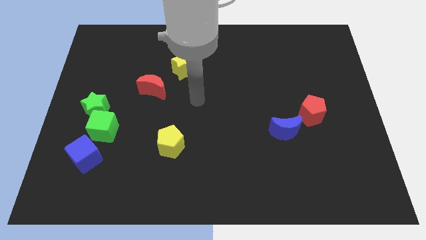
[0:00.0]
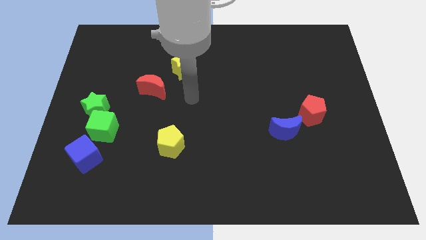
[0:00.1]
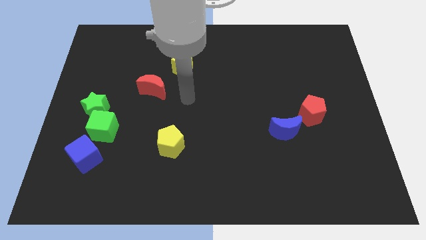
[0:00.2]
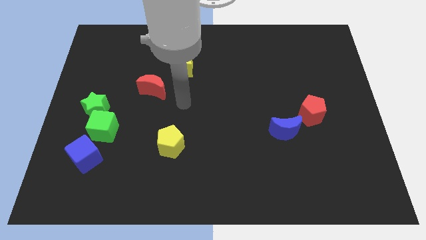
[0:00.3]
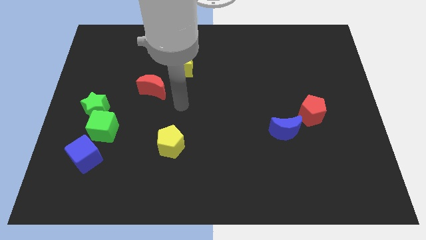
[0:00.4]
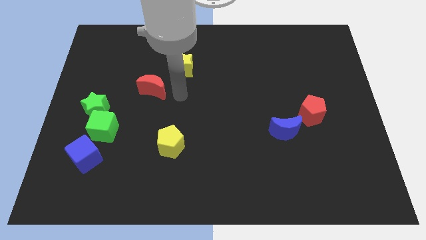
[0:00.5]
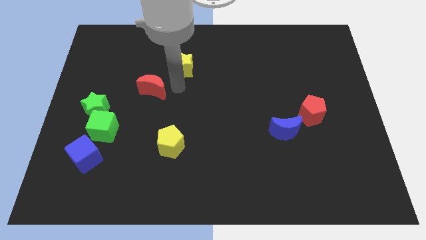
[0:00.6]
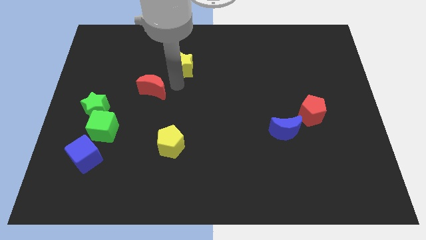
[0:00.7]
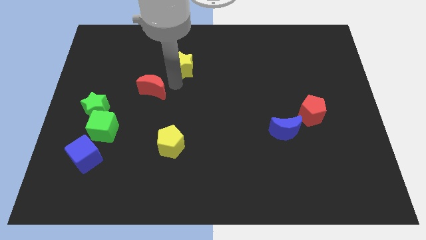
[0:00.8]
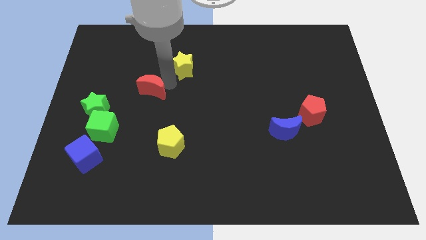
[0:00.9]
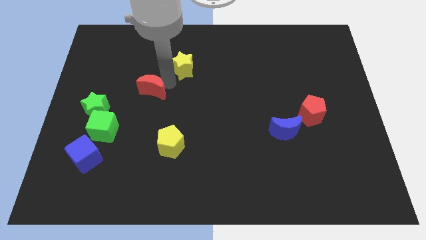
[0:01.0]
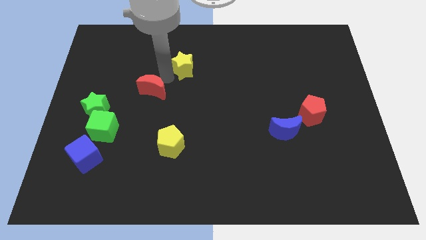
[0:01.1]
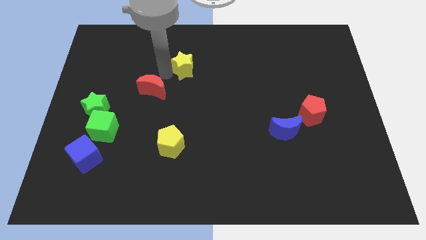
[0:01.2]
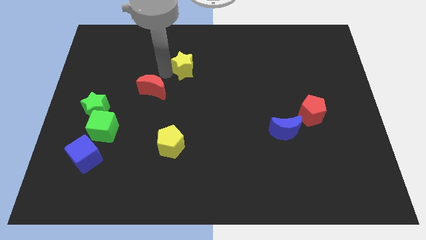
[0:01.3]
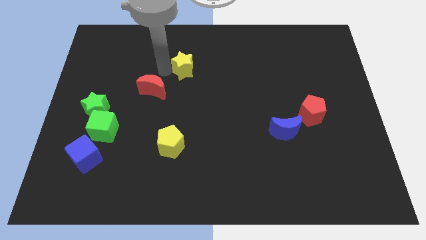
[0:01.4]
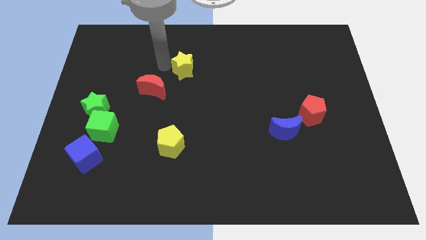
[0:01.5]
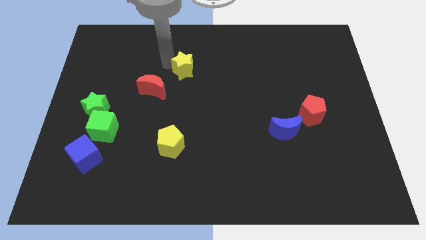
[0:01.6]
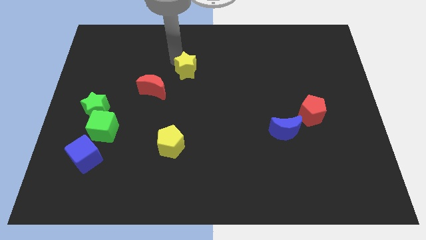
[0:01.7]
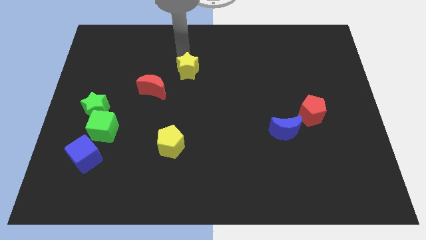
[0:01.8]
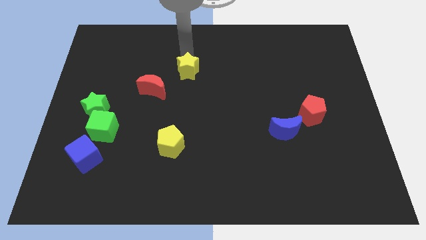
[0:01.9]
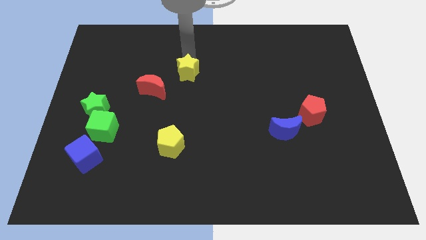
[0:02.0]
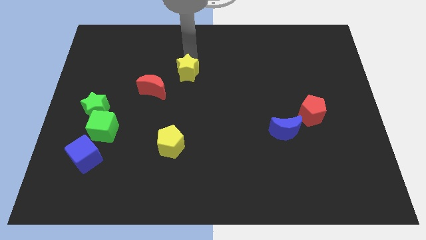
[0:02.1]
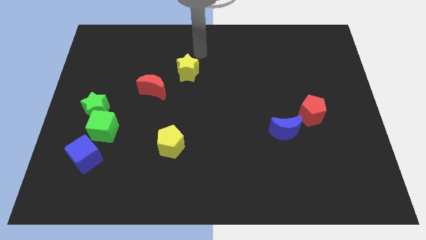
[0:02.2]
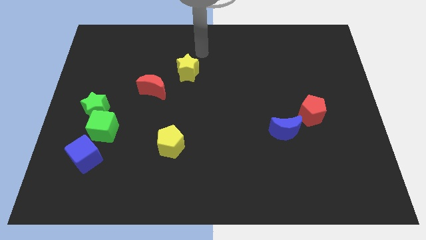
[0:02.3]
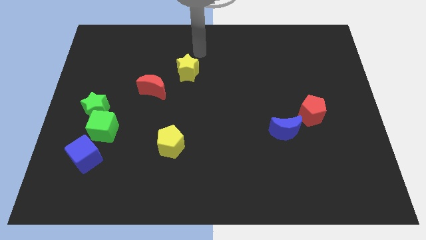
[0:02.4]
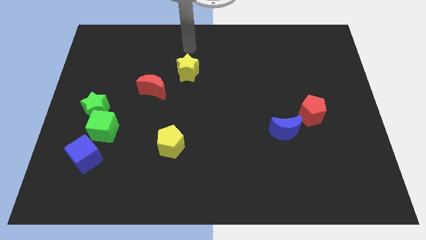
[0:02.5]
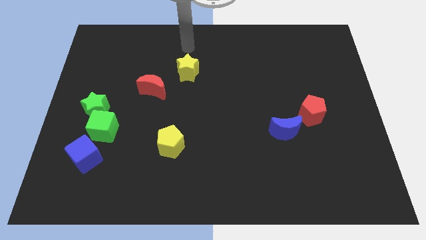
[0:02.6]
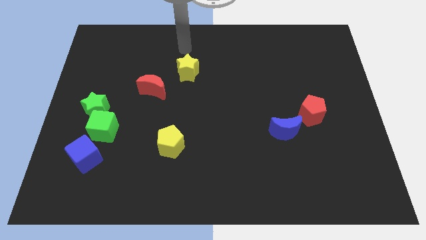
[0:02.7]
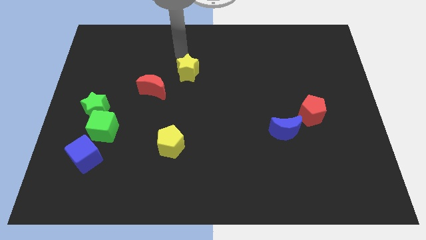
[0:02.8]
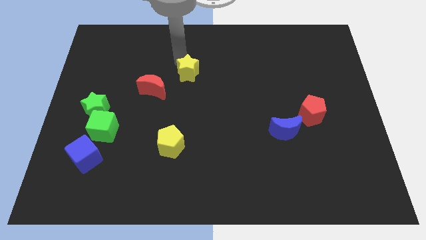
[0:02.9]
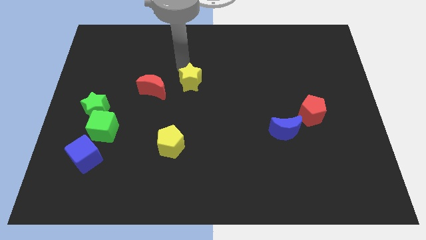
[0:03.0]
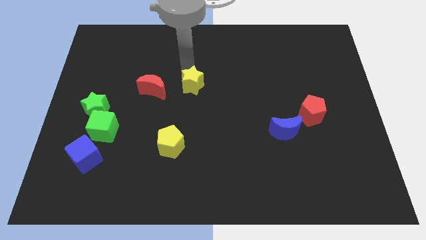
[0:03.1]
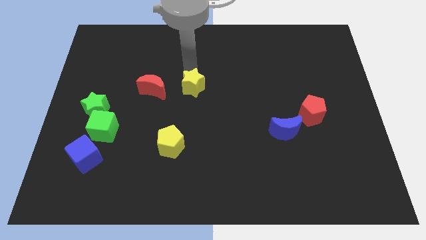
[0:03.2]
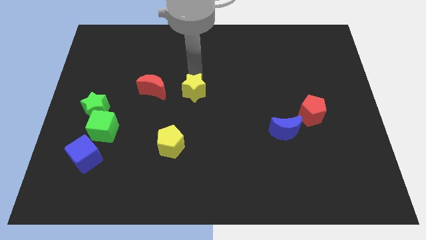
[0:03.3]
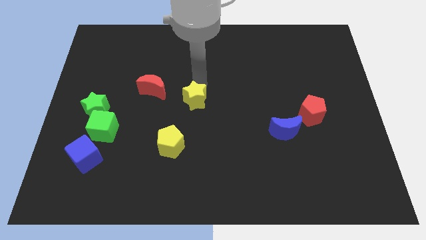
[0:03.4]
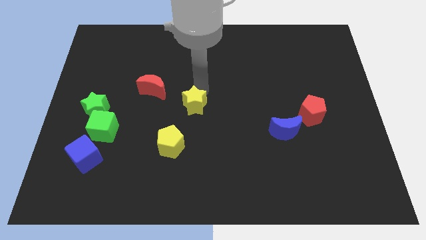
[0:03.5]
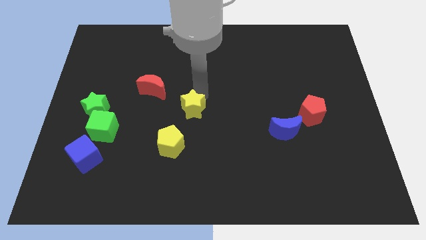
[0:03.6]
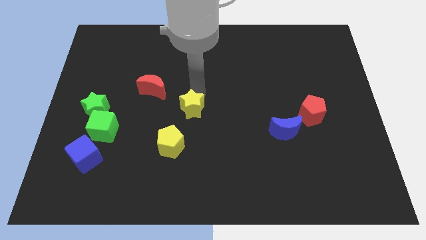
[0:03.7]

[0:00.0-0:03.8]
push yellow star towards yellow pentagon

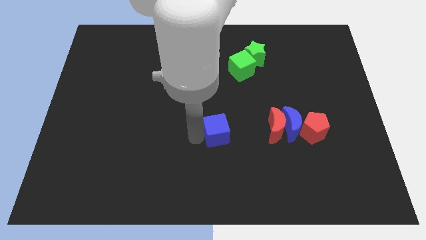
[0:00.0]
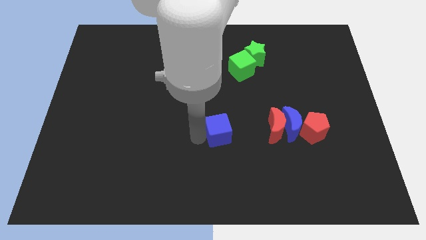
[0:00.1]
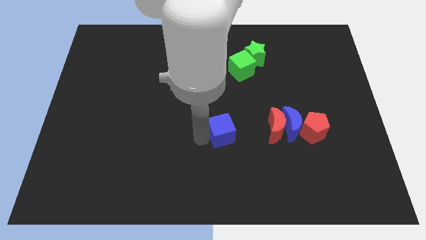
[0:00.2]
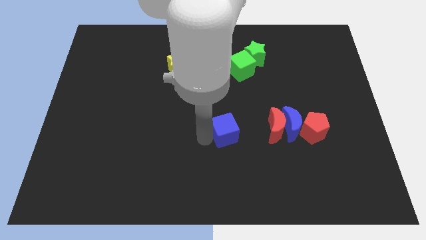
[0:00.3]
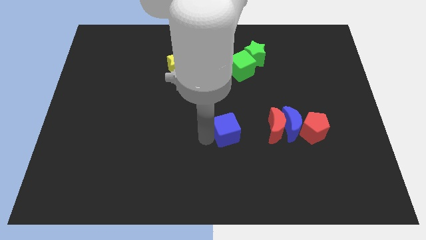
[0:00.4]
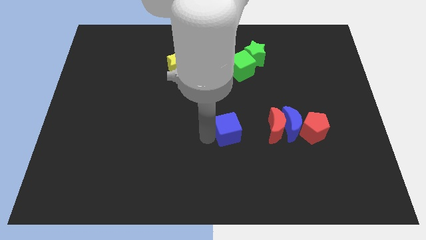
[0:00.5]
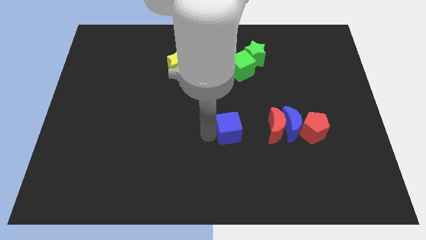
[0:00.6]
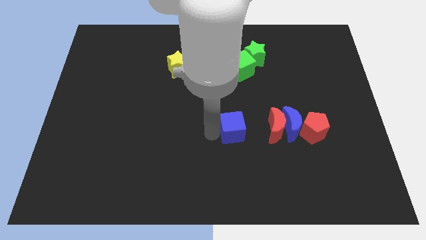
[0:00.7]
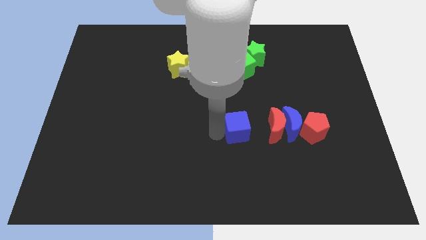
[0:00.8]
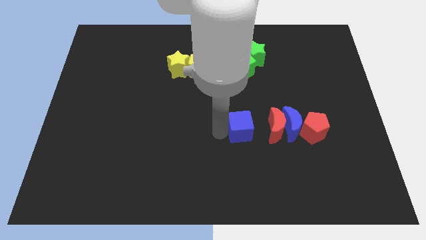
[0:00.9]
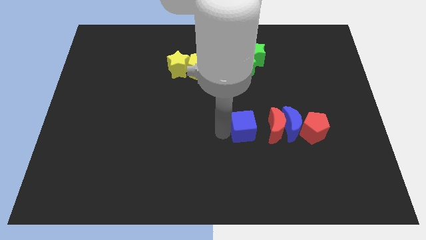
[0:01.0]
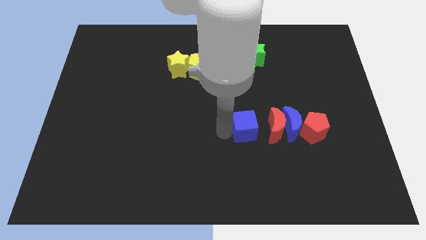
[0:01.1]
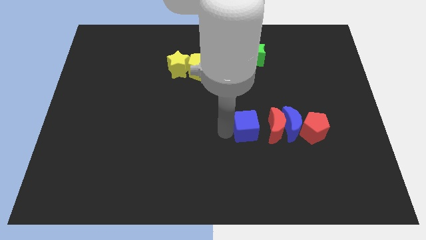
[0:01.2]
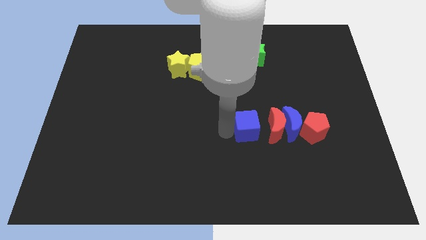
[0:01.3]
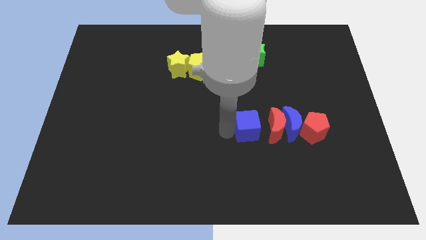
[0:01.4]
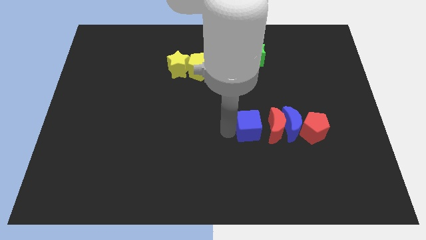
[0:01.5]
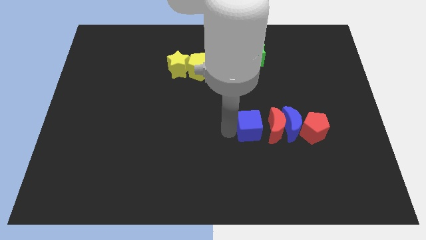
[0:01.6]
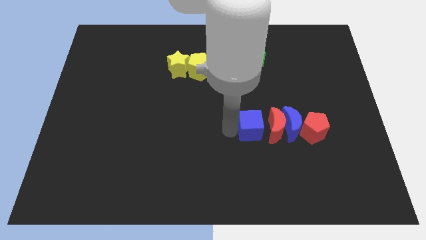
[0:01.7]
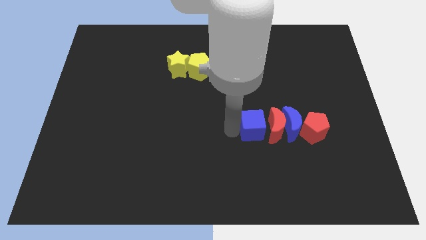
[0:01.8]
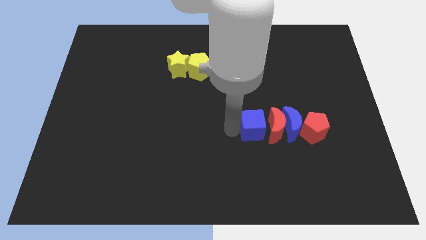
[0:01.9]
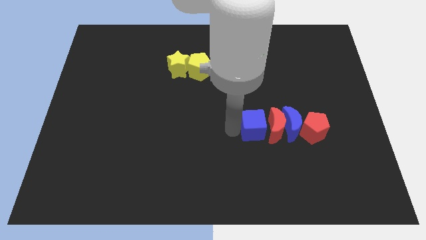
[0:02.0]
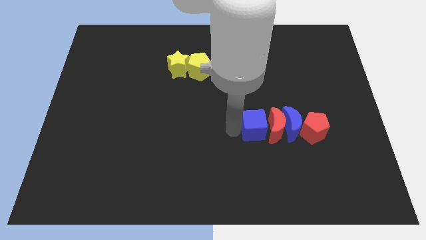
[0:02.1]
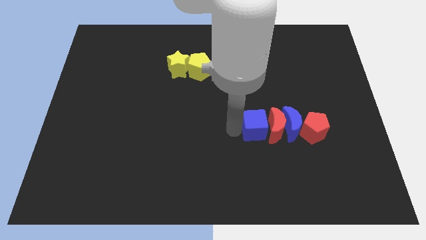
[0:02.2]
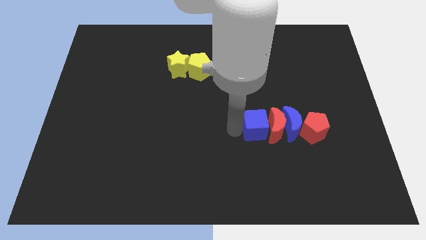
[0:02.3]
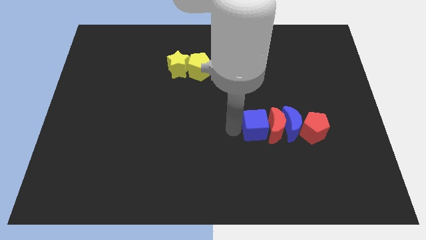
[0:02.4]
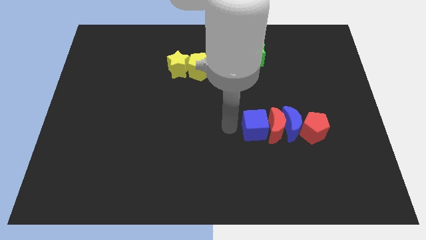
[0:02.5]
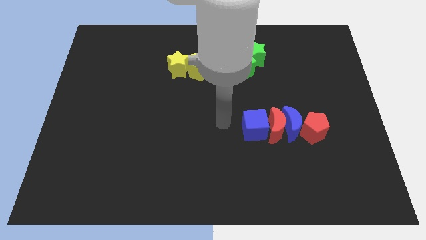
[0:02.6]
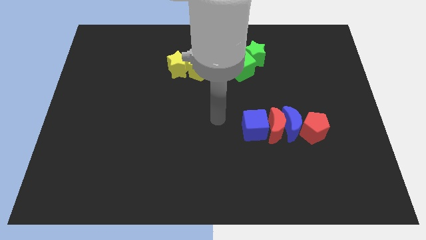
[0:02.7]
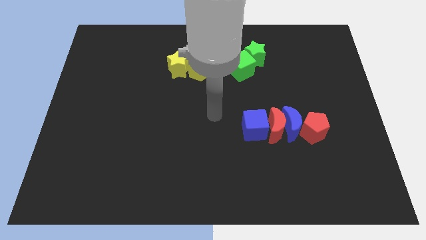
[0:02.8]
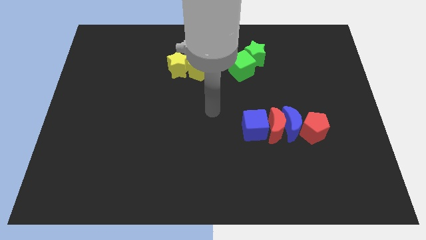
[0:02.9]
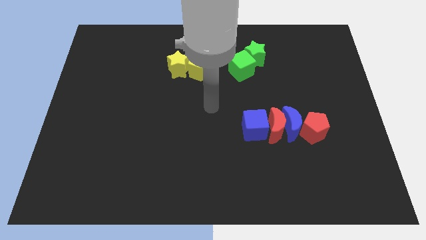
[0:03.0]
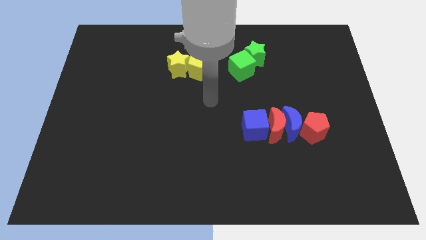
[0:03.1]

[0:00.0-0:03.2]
move the blue cube close to the red crescent

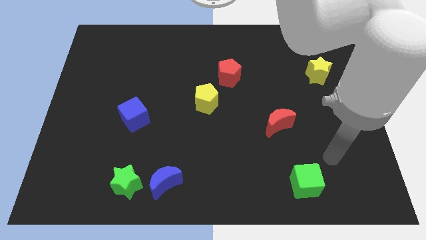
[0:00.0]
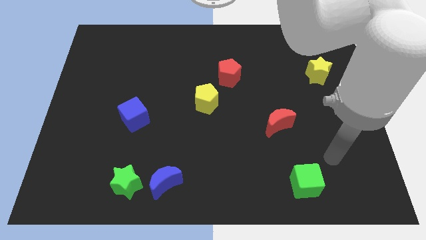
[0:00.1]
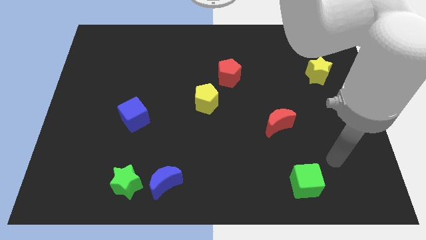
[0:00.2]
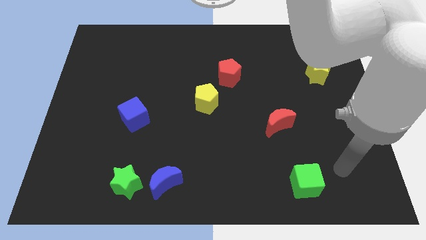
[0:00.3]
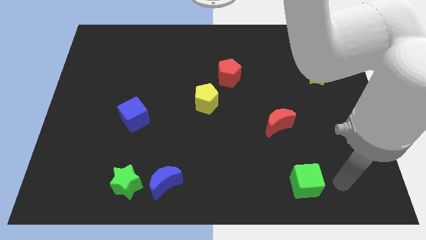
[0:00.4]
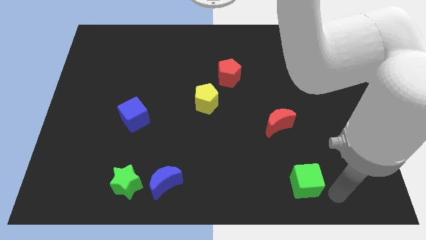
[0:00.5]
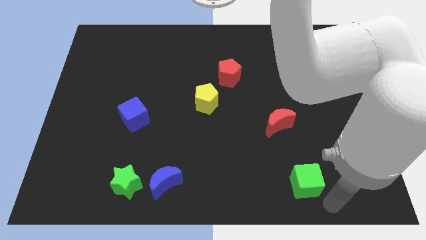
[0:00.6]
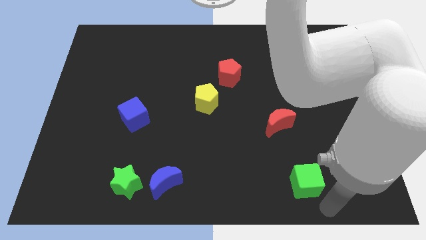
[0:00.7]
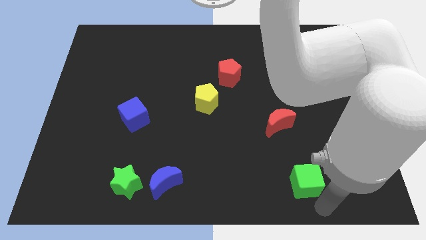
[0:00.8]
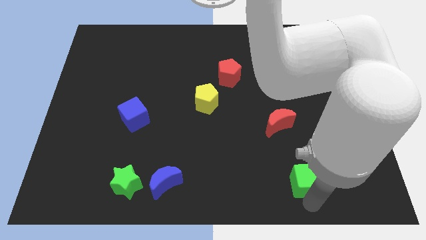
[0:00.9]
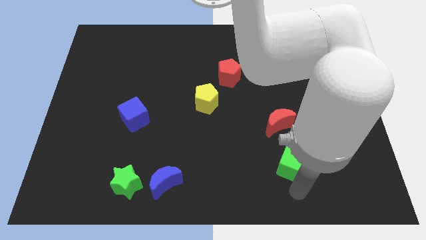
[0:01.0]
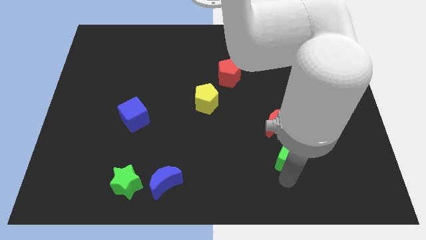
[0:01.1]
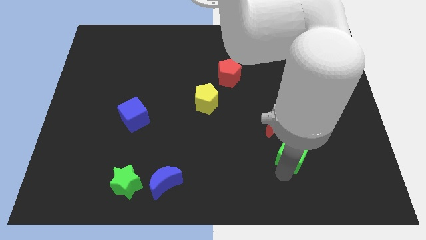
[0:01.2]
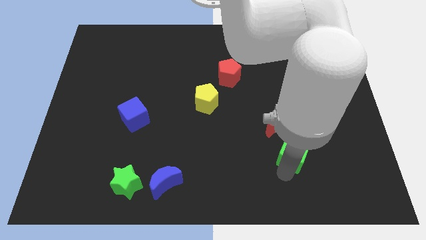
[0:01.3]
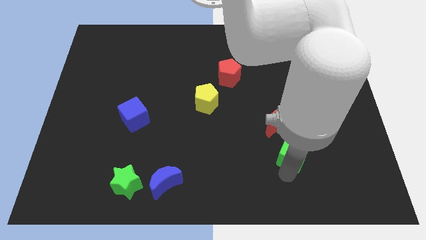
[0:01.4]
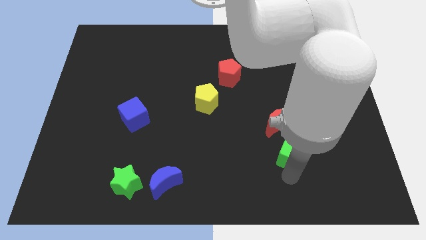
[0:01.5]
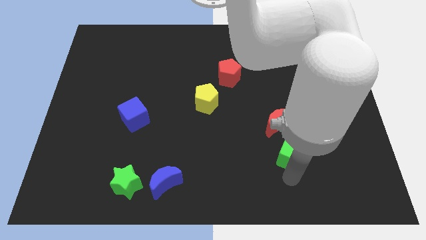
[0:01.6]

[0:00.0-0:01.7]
move the green cube towards the bottom of the red moon

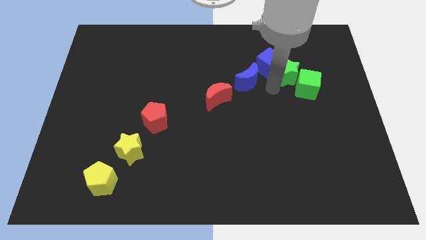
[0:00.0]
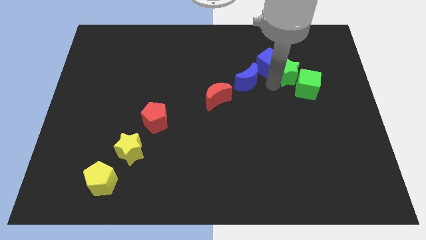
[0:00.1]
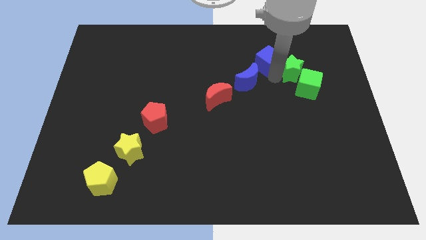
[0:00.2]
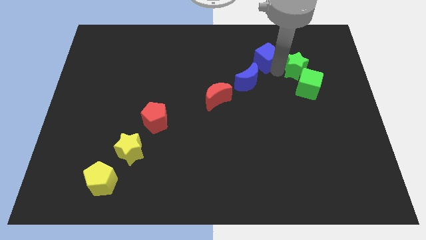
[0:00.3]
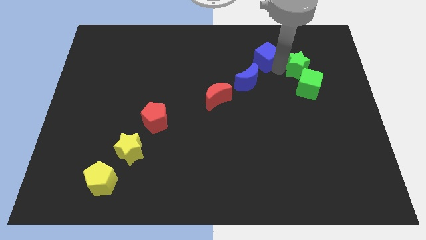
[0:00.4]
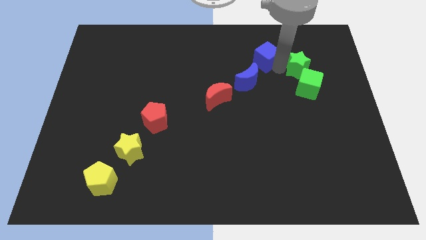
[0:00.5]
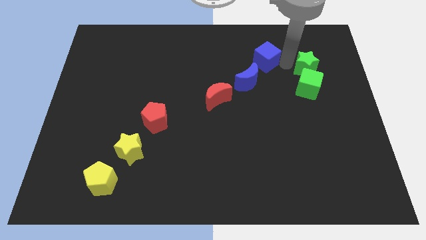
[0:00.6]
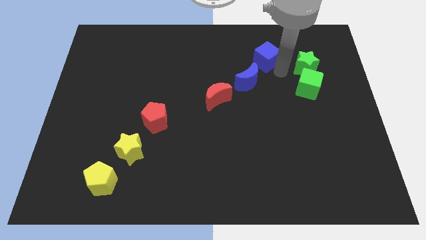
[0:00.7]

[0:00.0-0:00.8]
separate blue cube with green star
